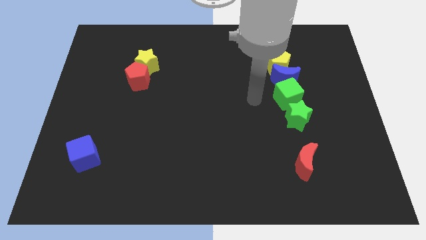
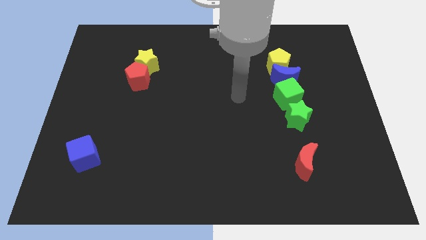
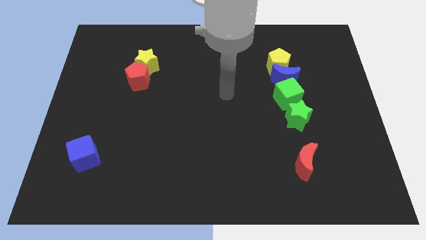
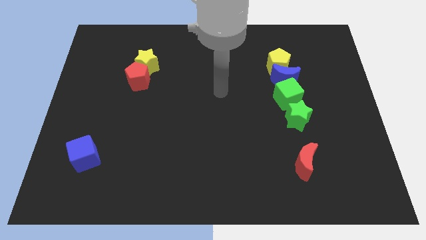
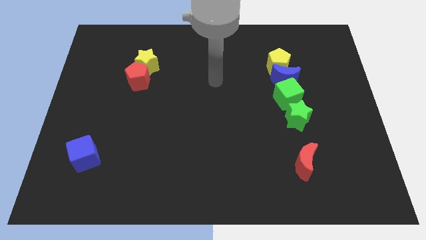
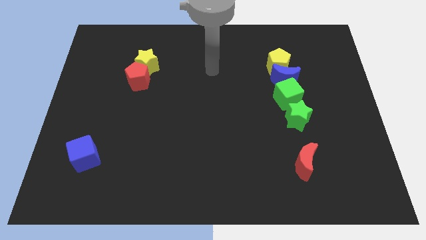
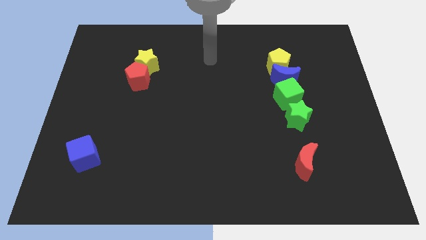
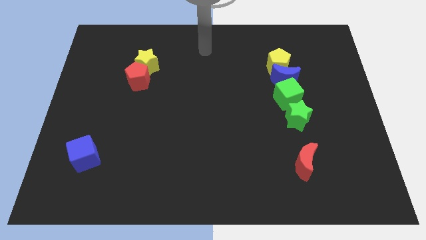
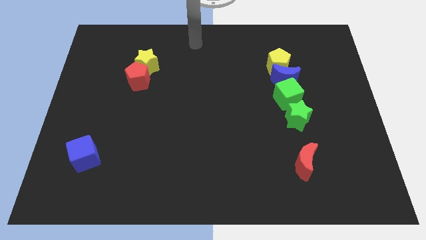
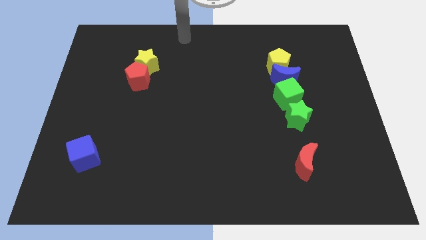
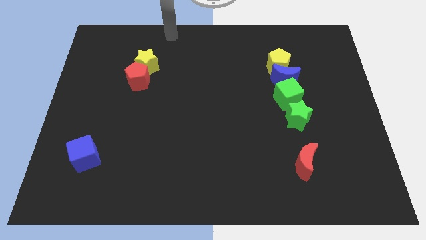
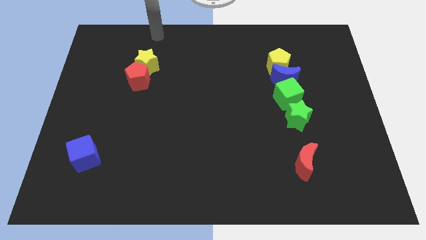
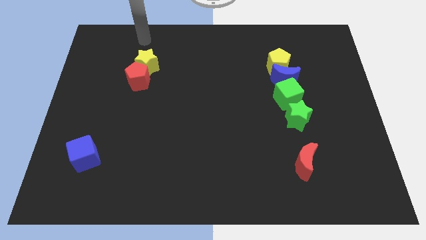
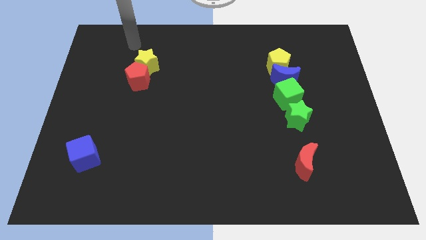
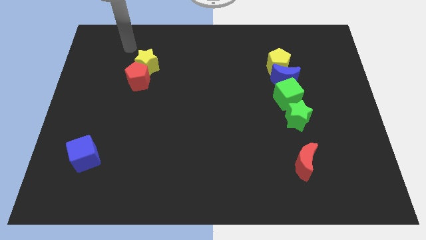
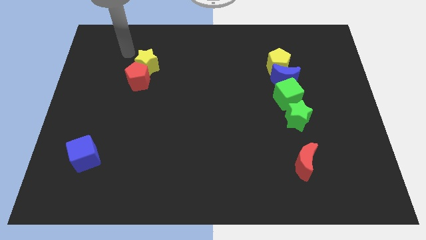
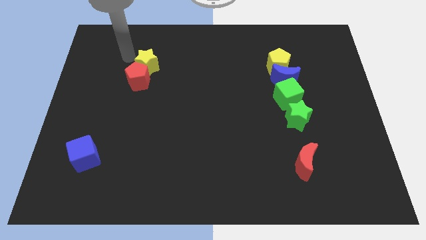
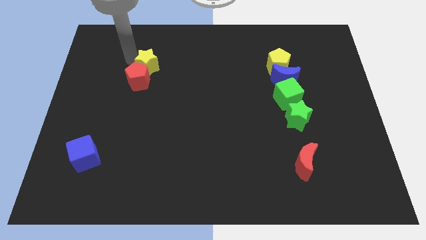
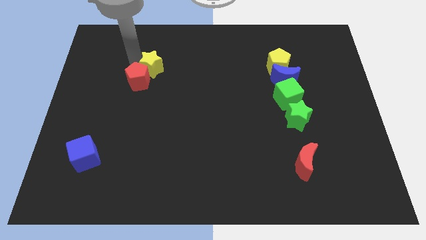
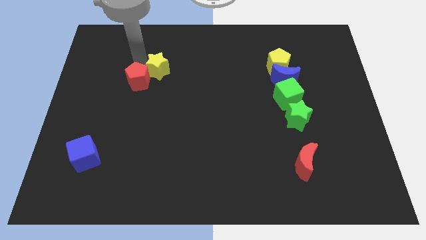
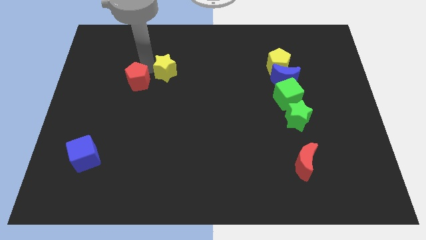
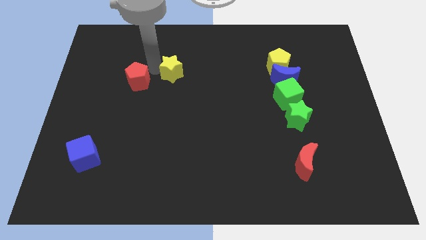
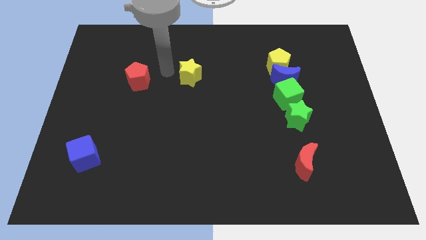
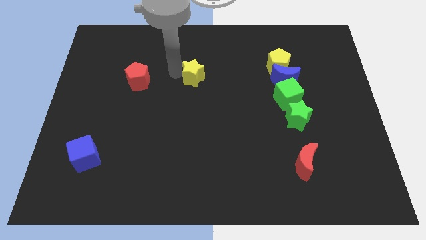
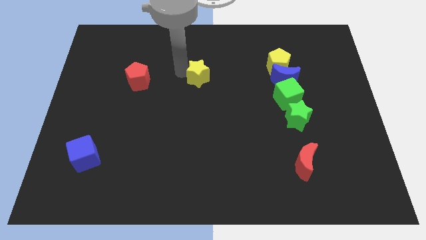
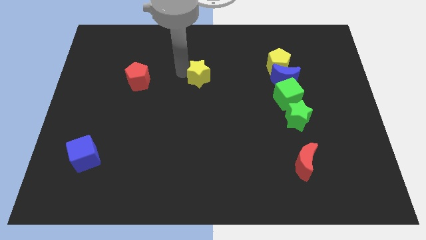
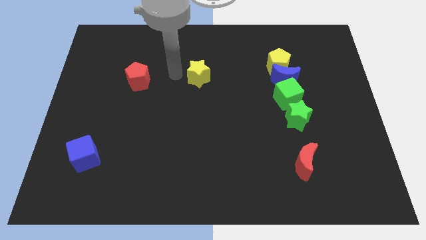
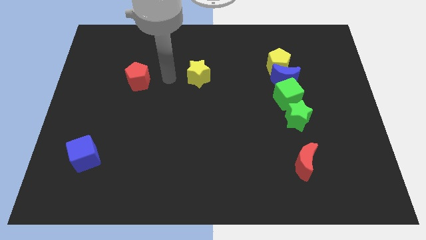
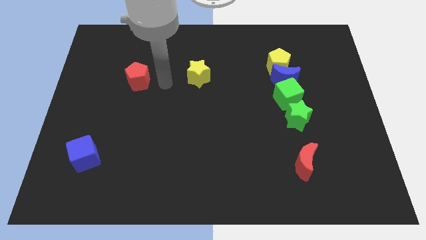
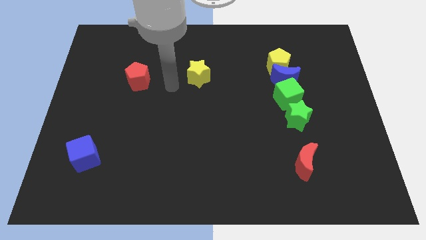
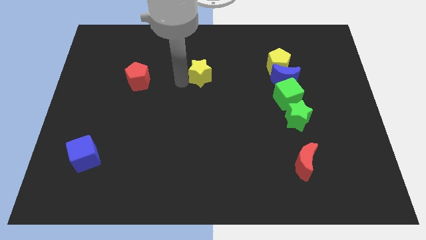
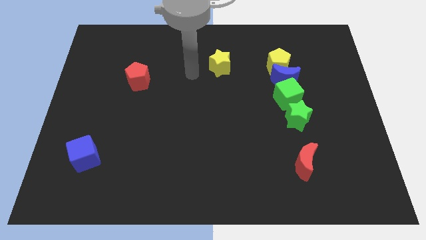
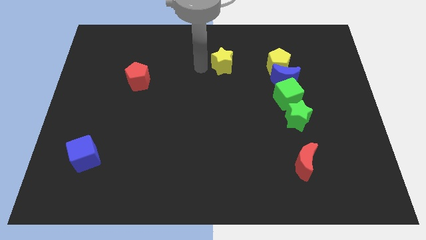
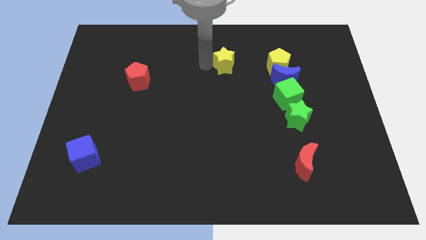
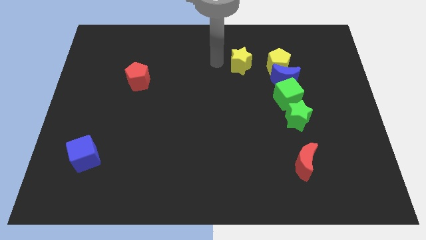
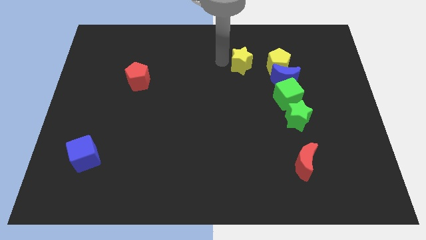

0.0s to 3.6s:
separate the yellow star from the red pentagon

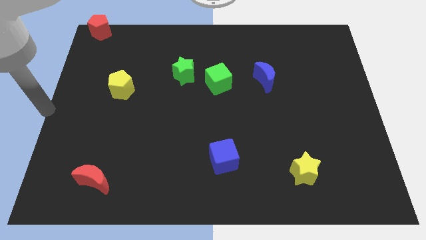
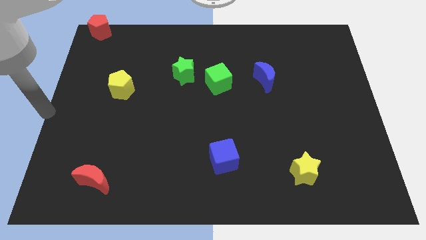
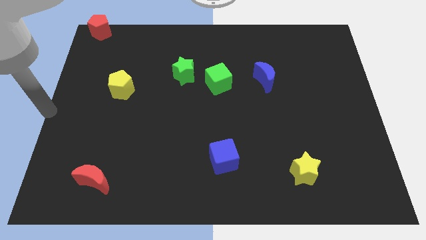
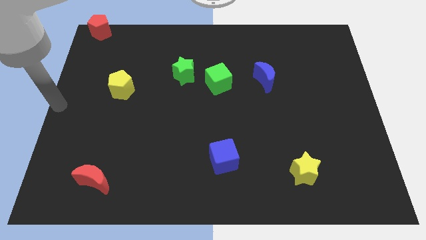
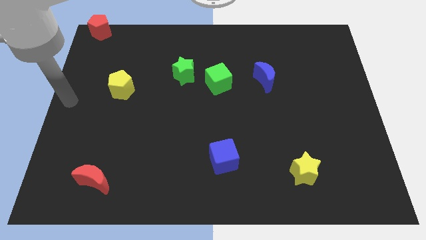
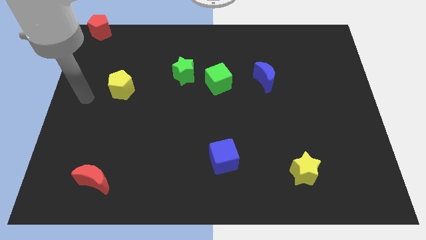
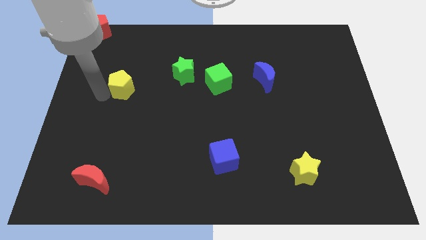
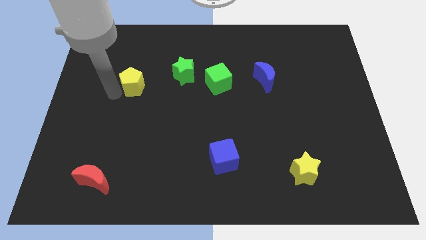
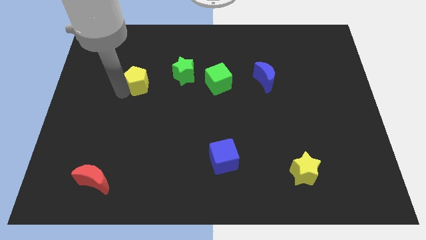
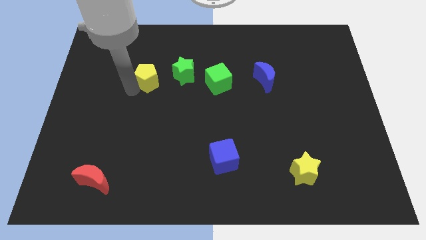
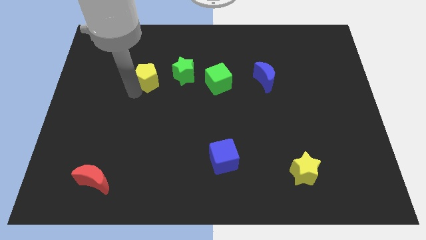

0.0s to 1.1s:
push the yellow pentagon towards the green star

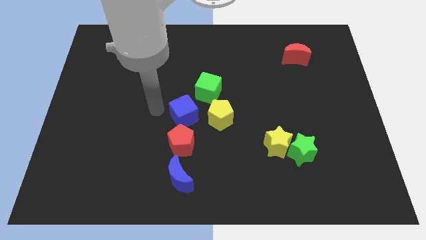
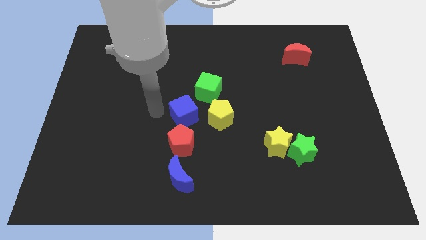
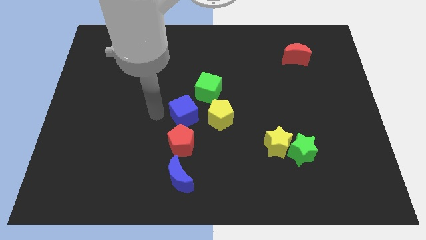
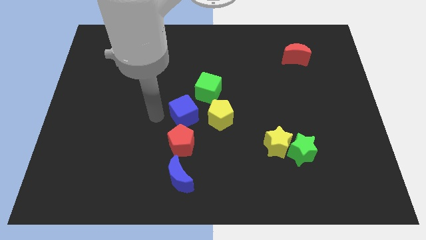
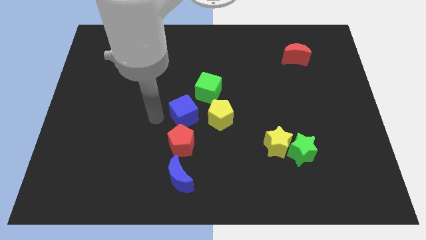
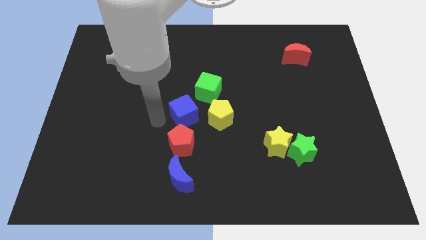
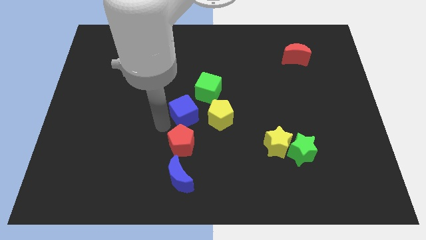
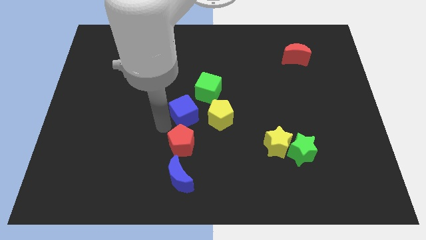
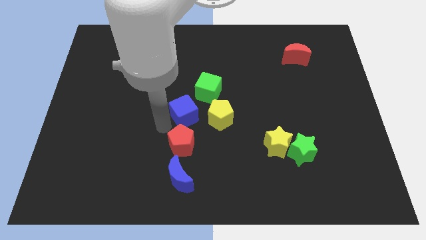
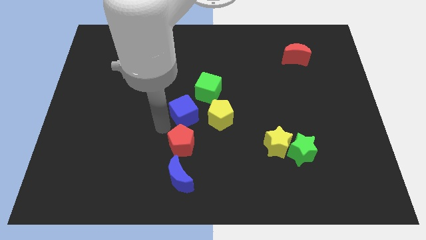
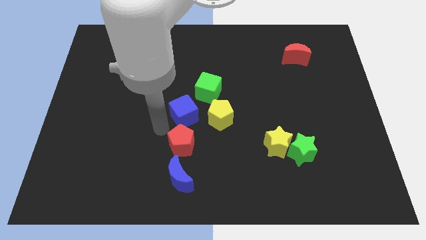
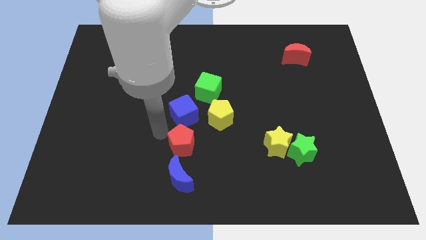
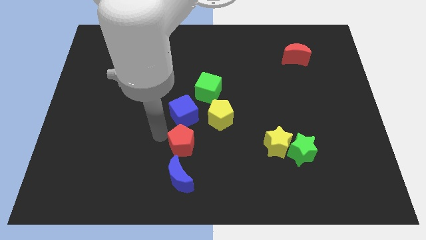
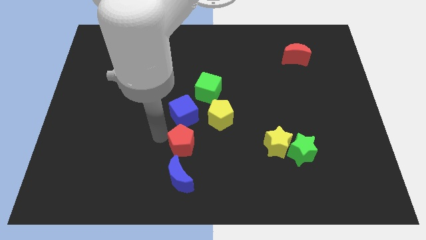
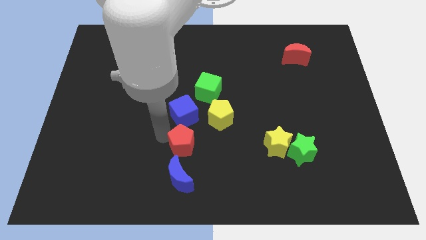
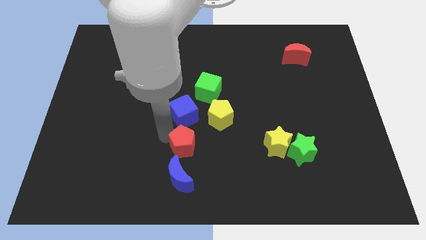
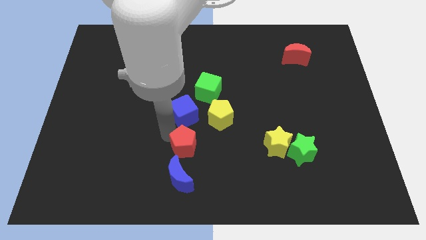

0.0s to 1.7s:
touch the top left side of the red pentagon

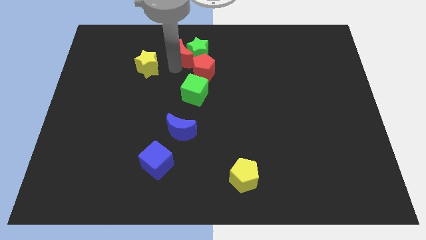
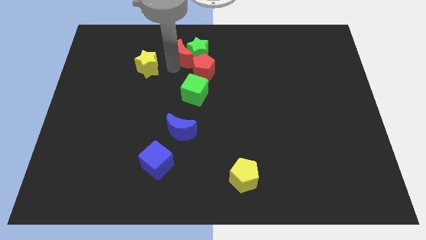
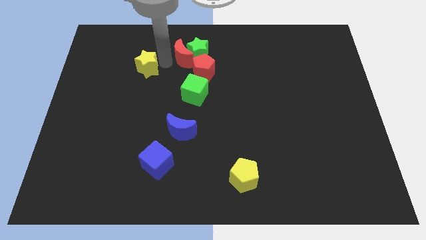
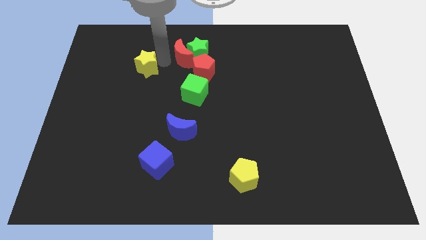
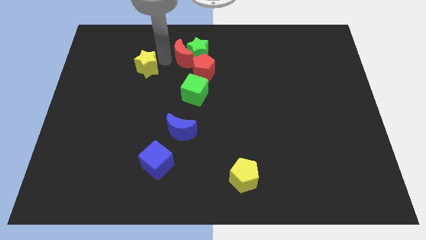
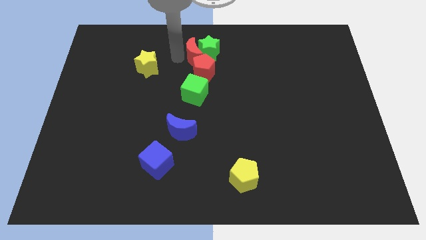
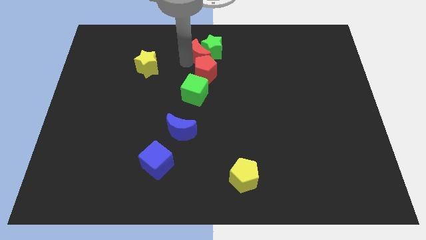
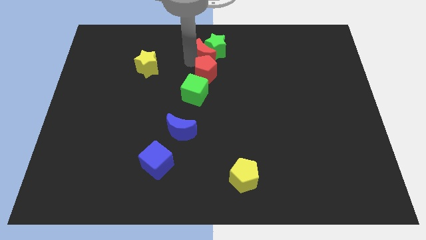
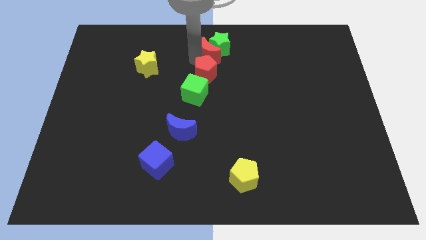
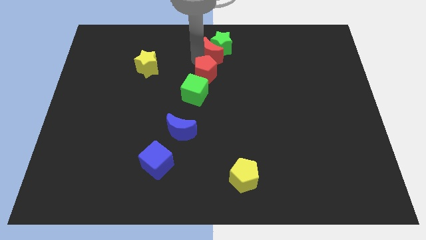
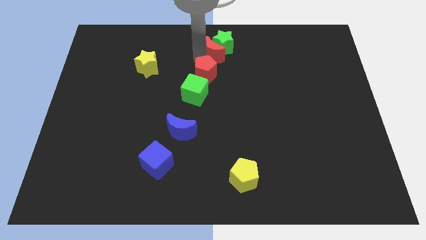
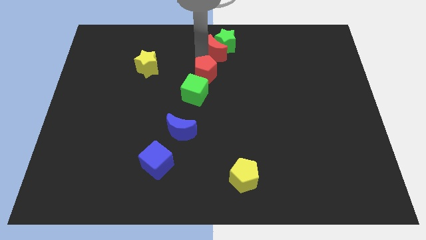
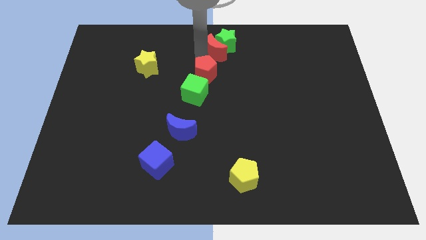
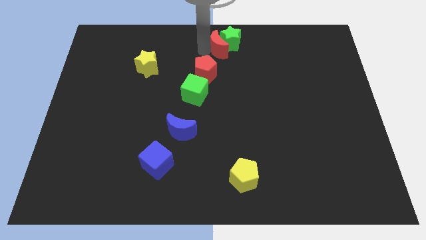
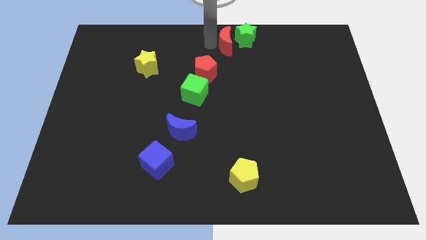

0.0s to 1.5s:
push the red crescent into the green star

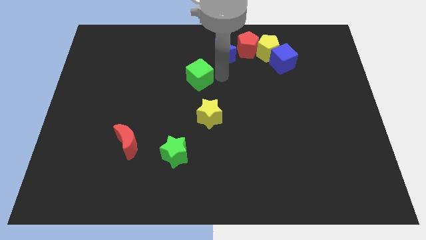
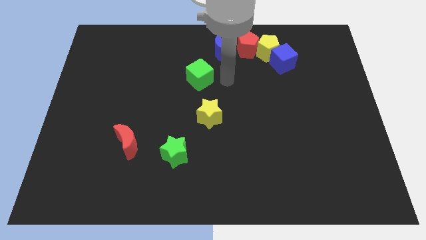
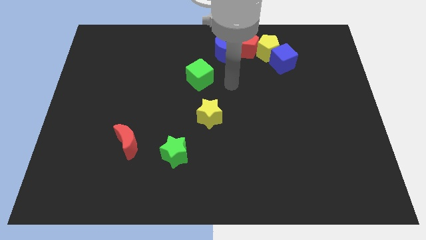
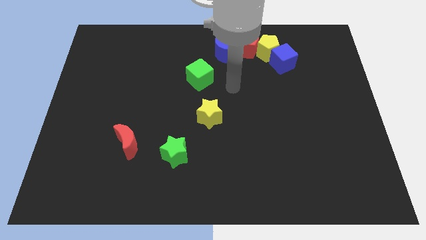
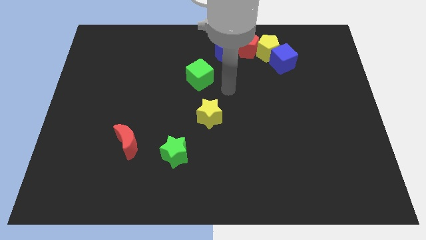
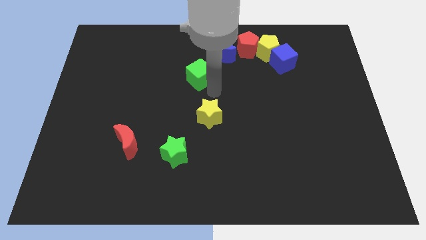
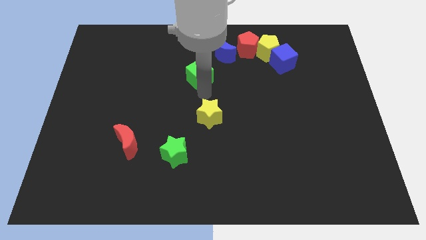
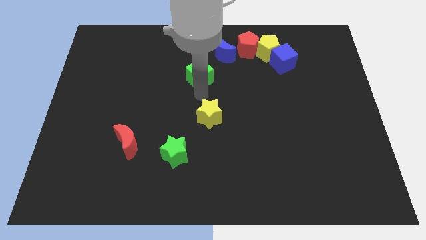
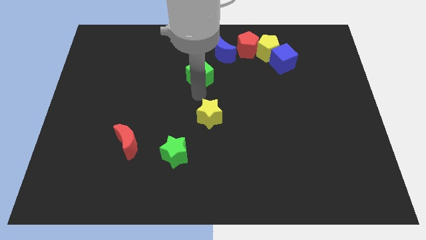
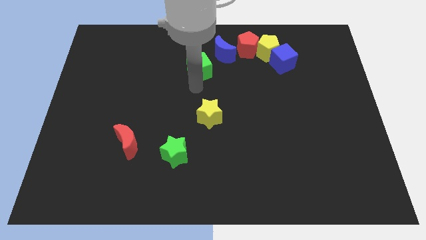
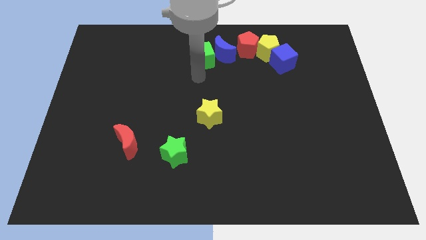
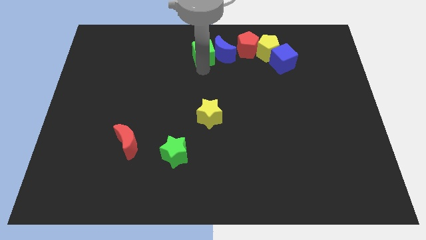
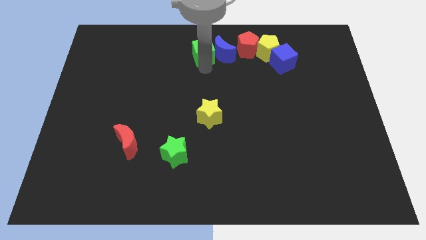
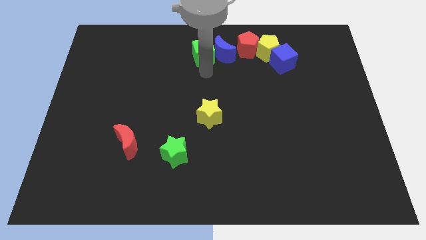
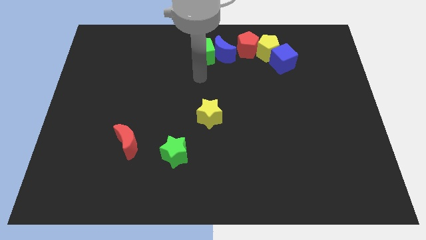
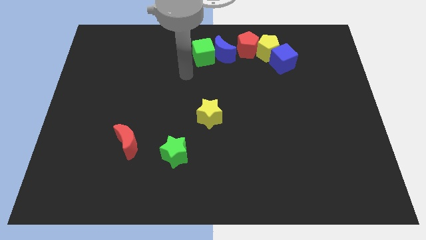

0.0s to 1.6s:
push the green cube slightly up
